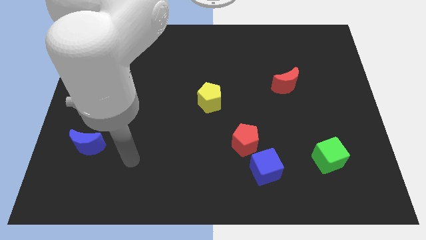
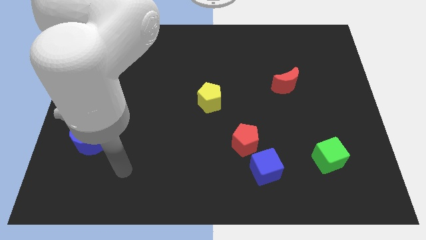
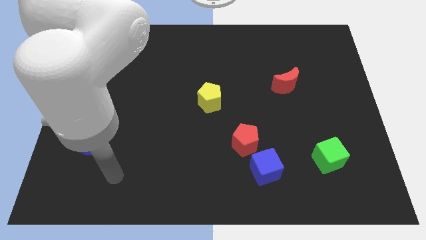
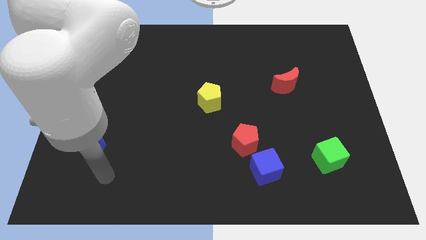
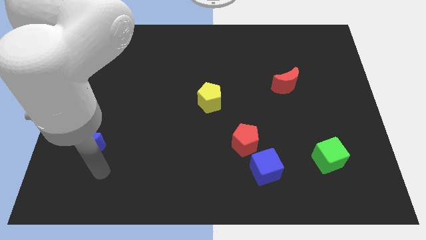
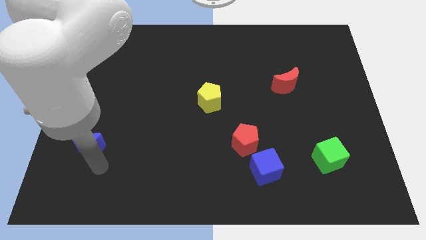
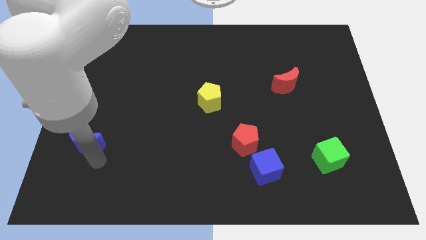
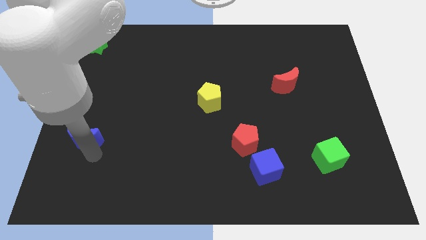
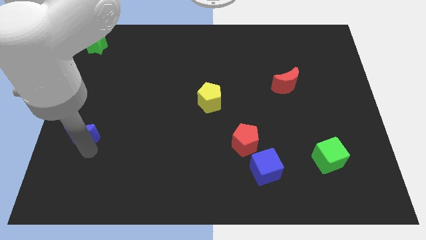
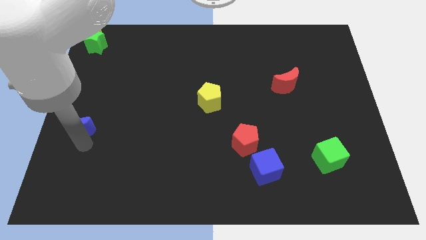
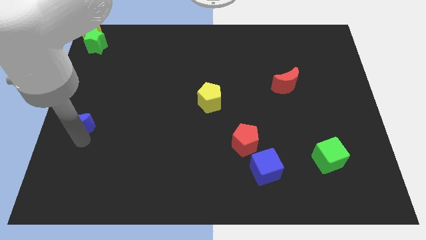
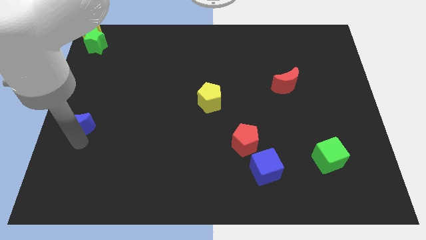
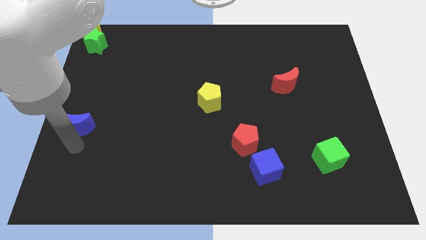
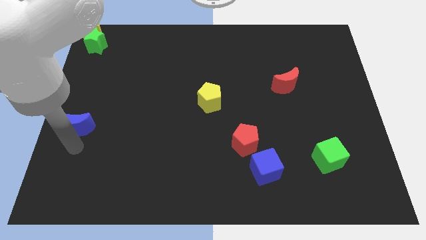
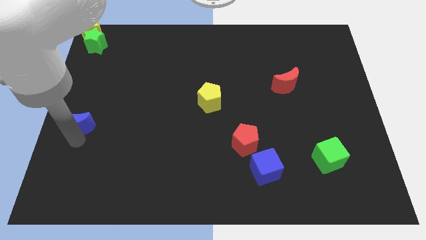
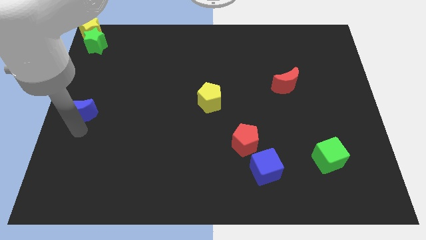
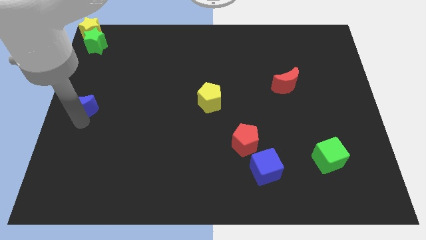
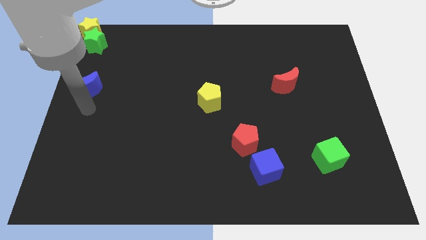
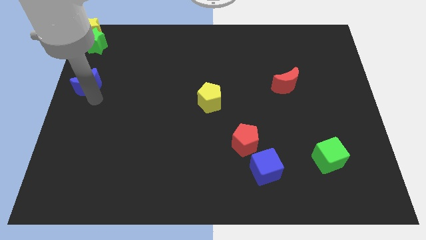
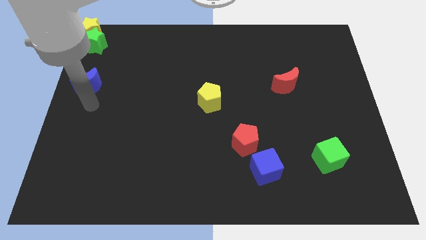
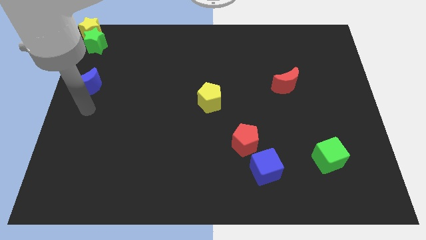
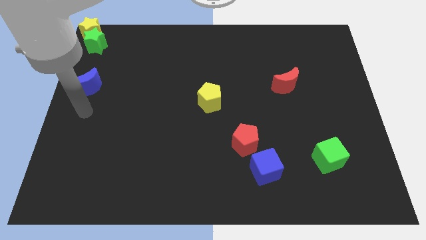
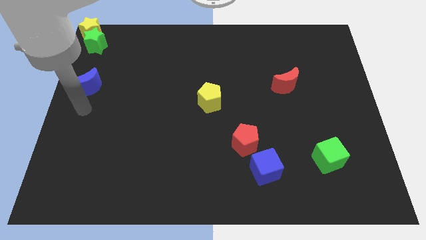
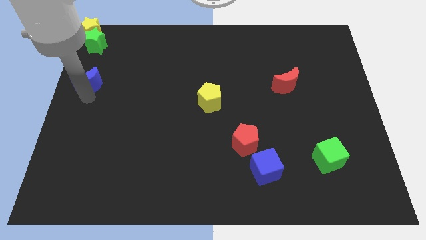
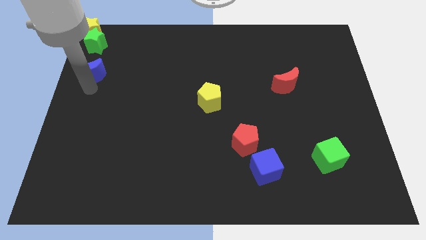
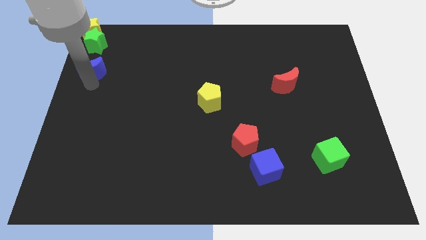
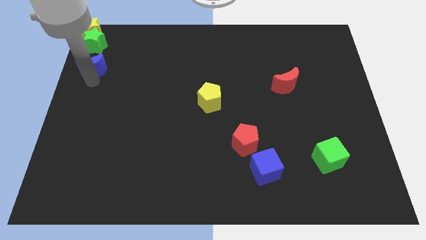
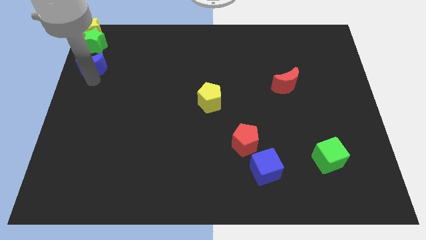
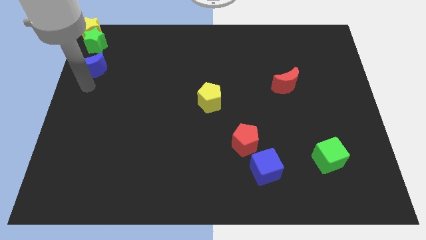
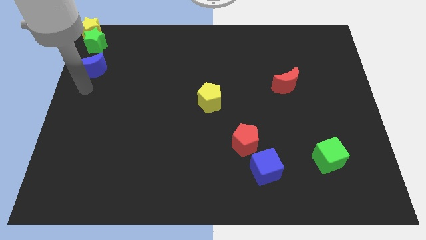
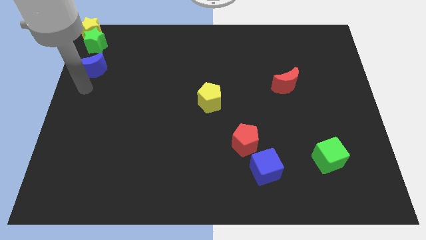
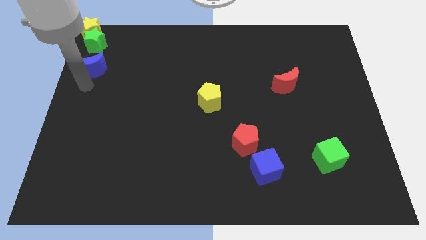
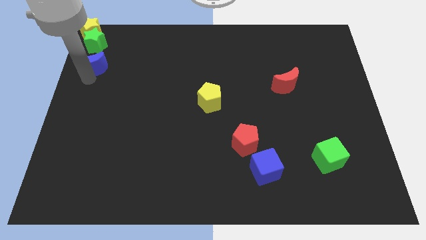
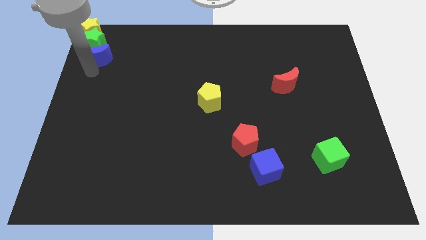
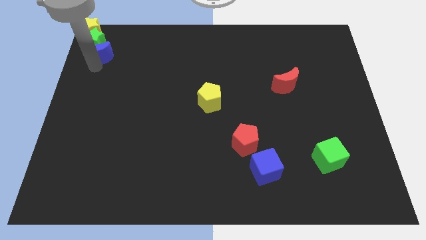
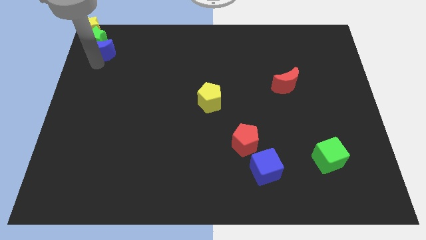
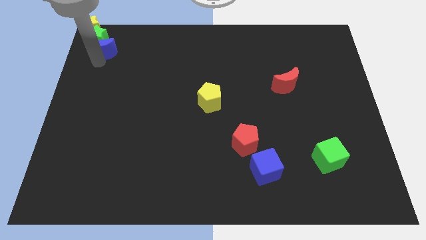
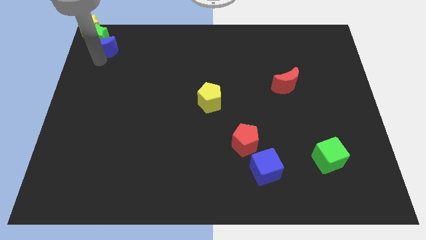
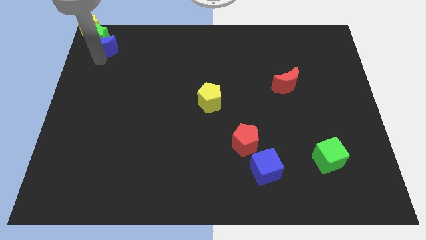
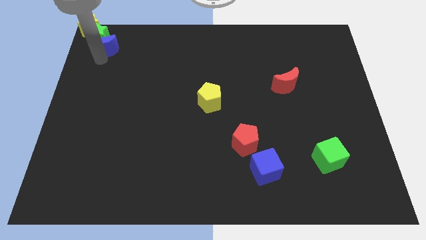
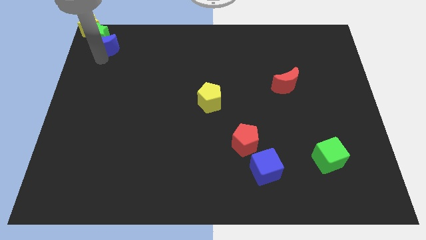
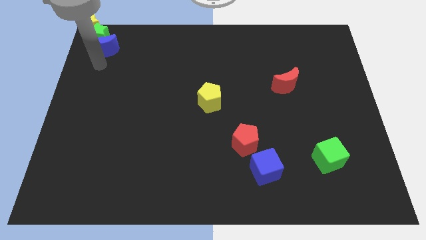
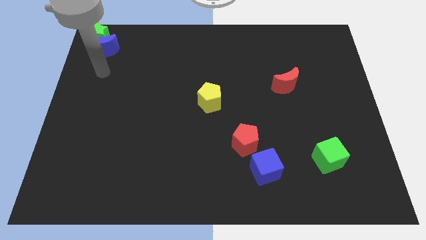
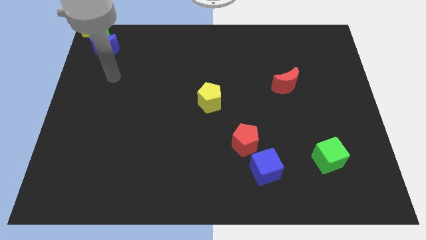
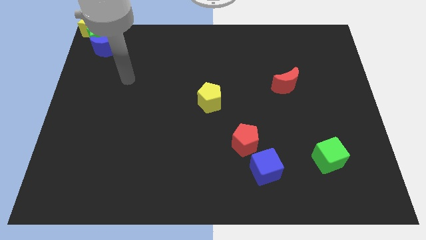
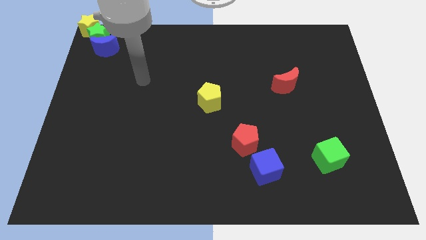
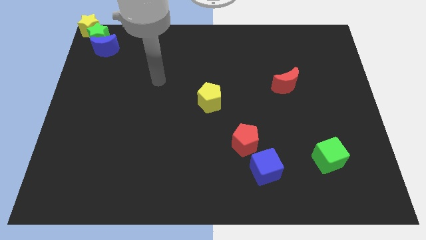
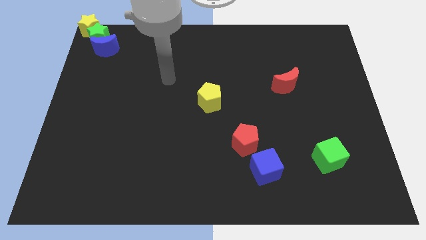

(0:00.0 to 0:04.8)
push the blue moon into green star

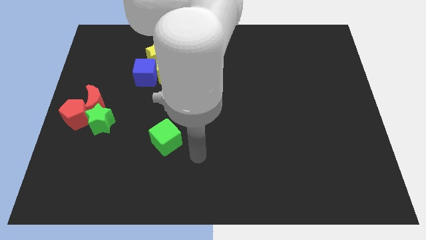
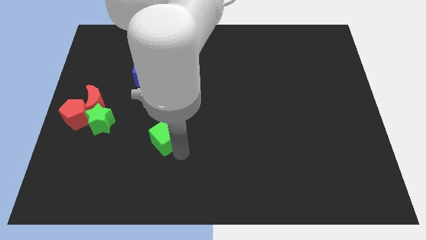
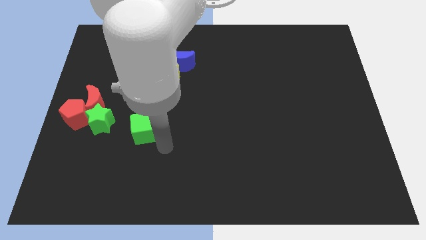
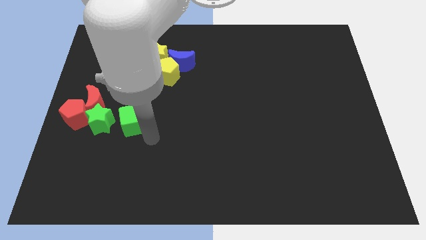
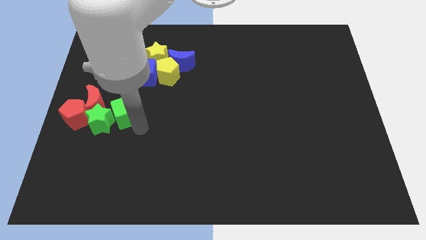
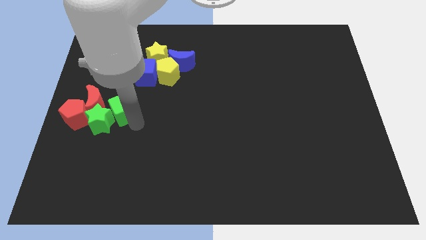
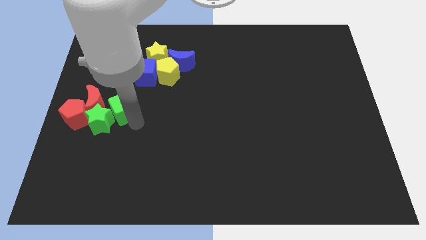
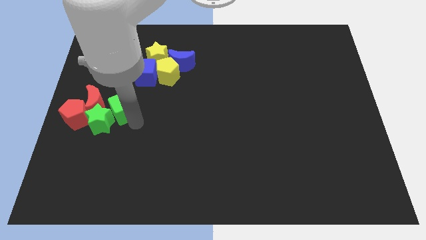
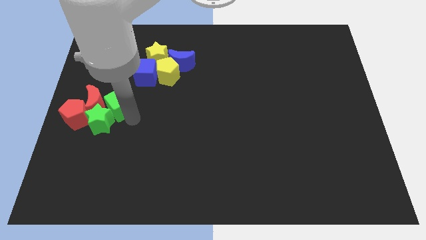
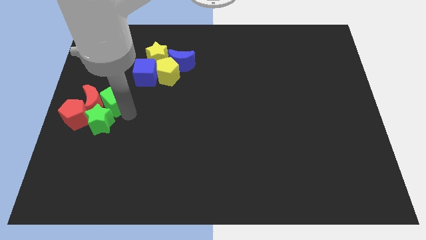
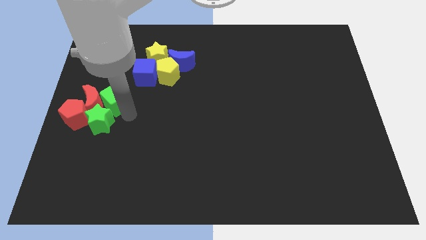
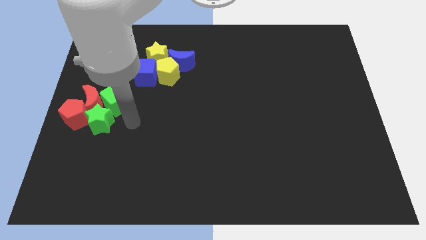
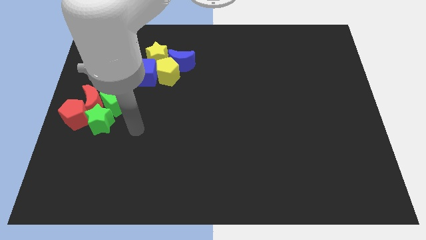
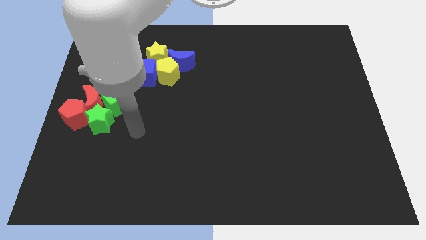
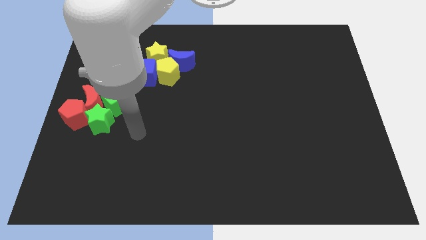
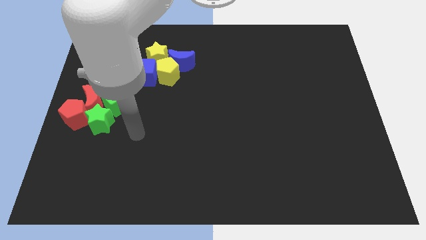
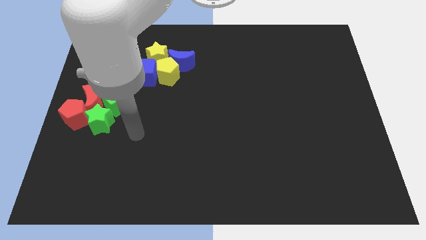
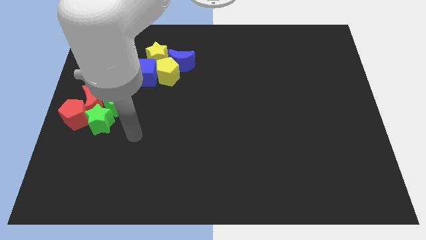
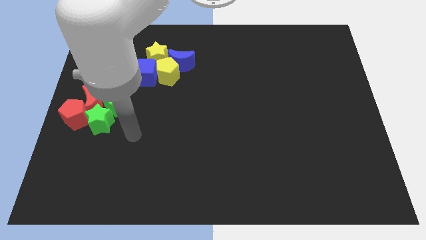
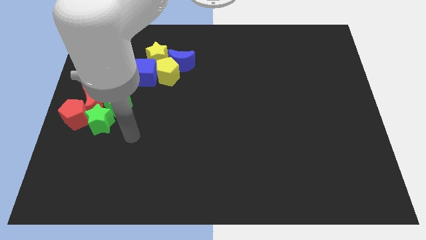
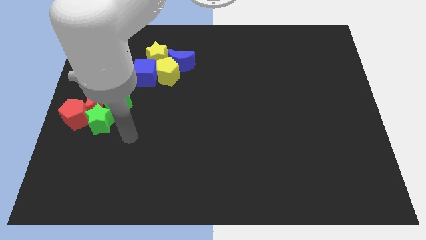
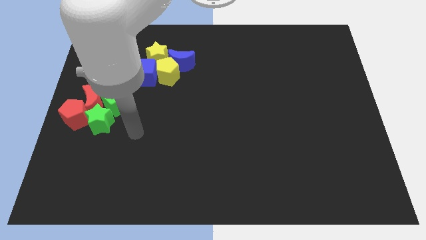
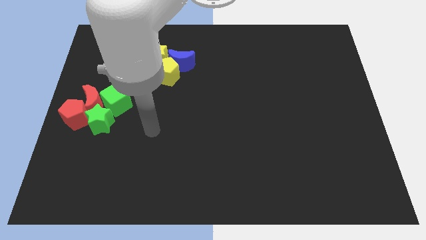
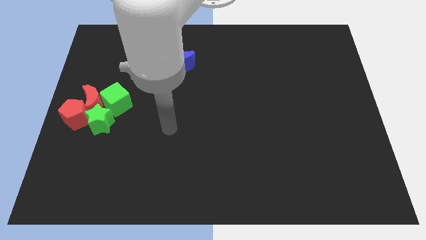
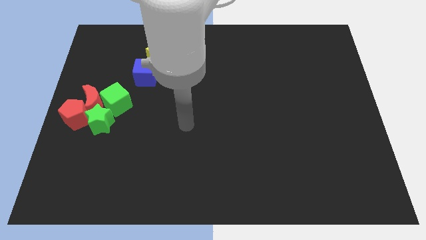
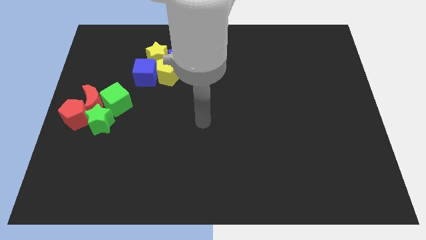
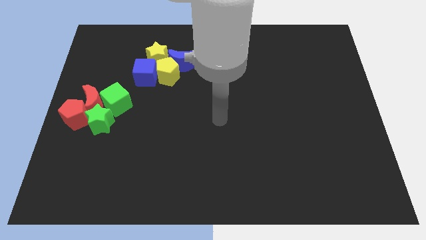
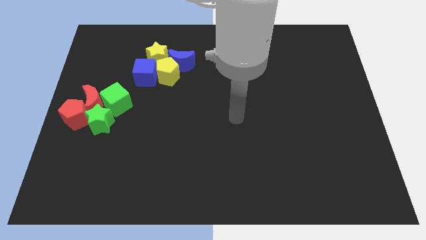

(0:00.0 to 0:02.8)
push the green cube into red crescent

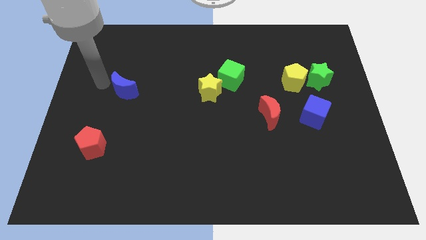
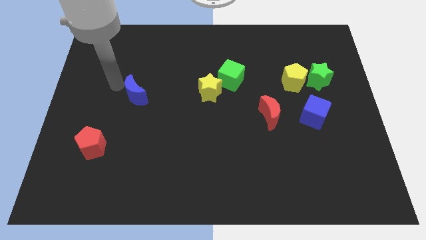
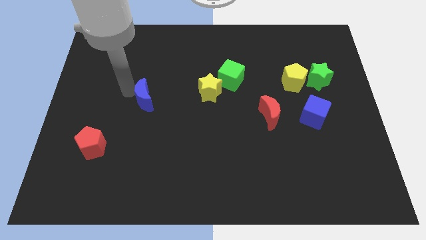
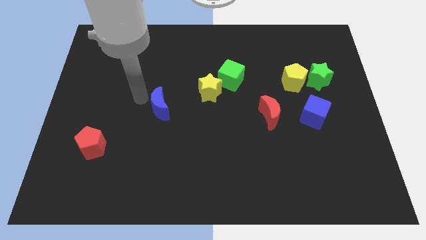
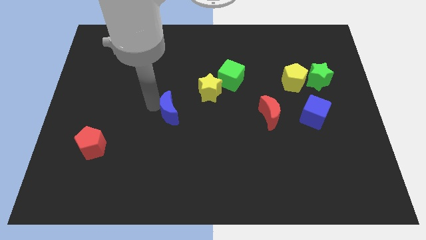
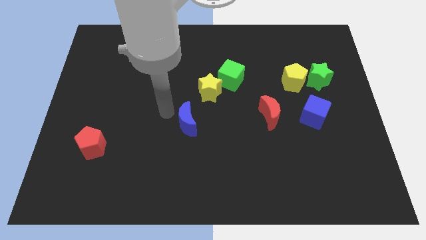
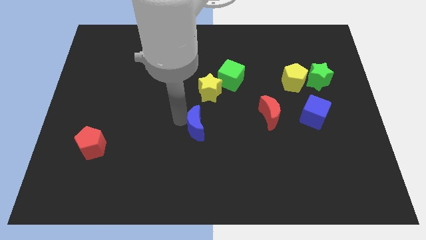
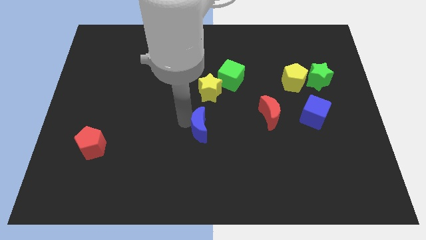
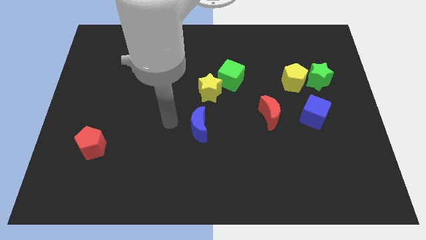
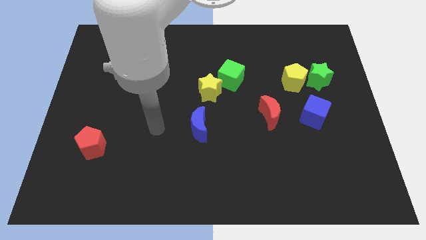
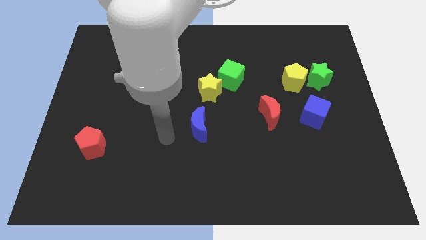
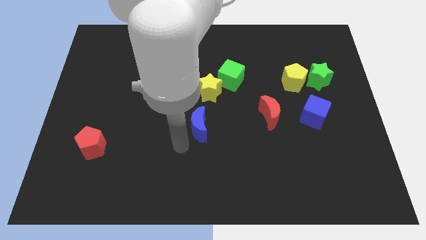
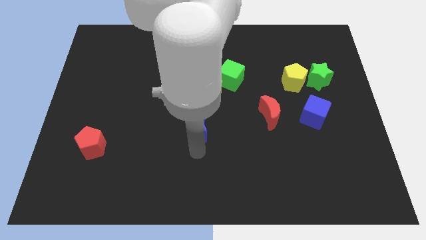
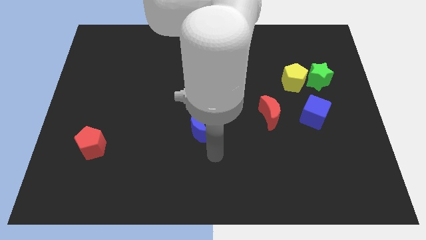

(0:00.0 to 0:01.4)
move the blue moon to the center
